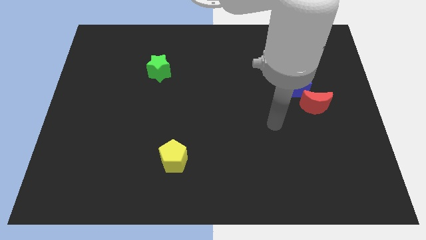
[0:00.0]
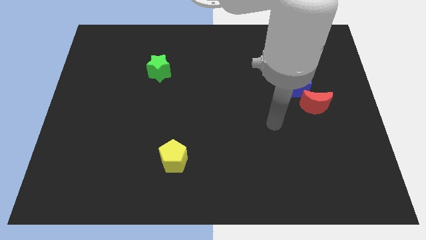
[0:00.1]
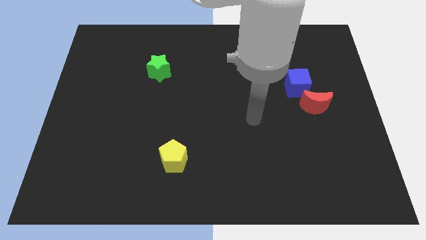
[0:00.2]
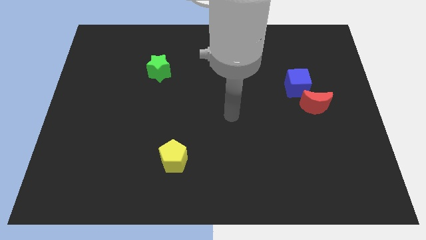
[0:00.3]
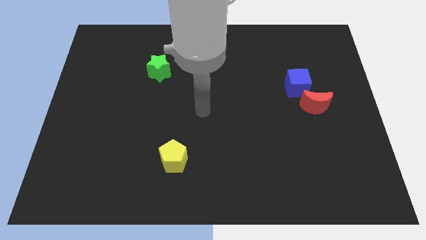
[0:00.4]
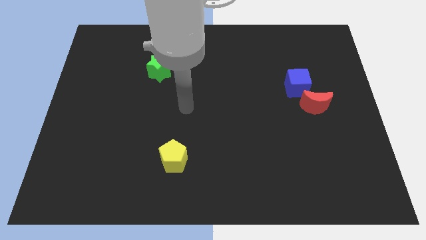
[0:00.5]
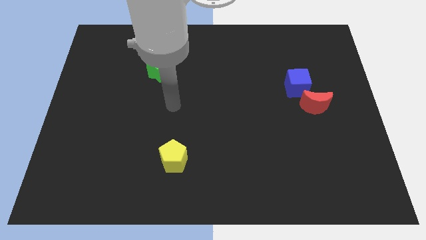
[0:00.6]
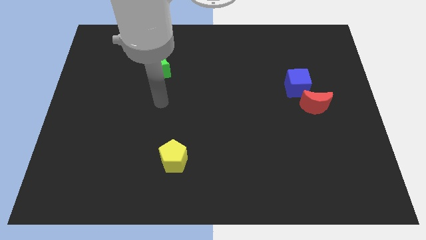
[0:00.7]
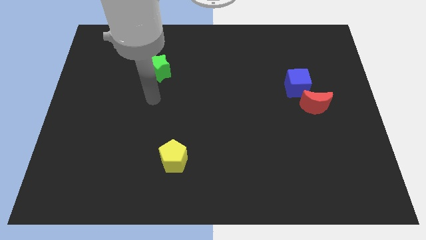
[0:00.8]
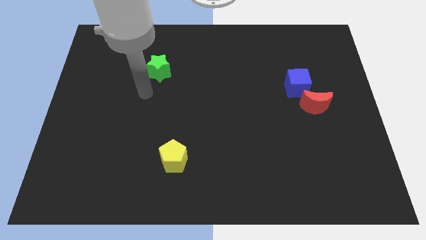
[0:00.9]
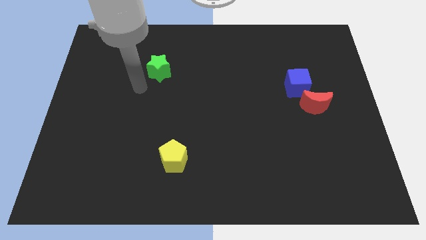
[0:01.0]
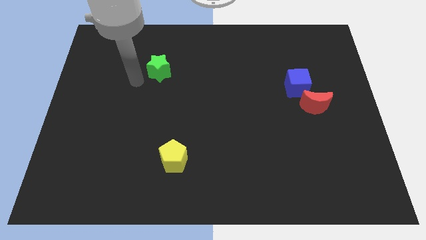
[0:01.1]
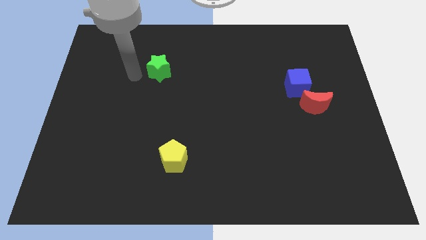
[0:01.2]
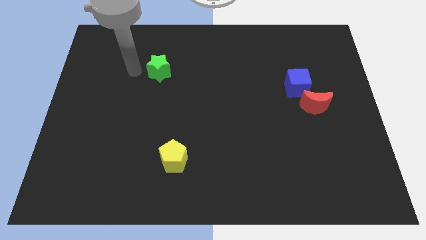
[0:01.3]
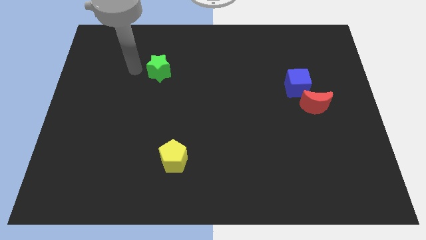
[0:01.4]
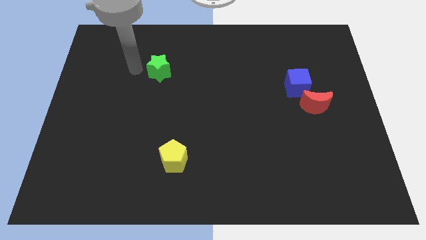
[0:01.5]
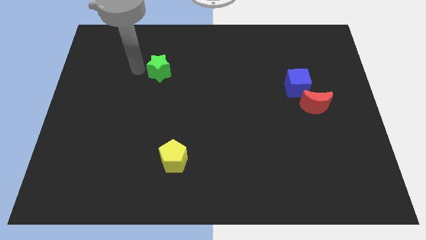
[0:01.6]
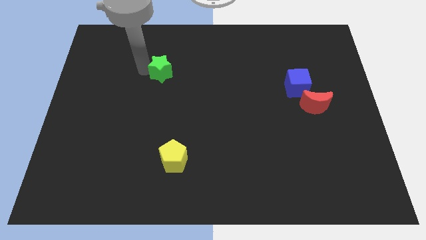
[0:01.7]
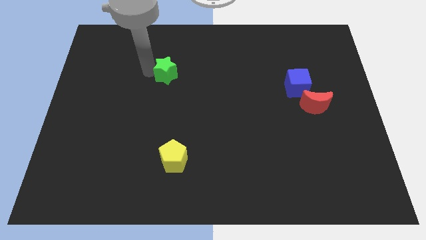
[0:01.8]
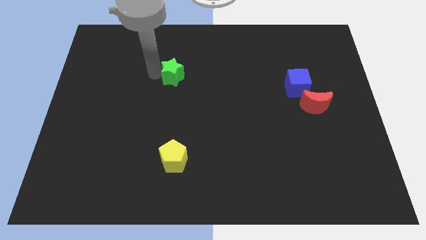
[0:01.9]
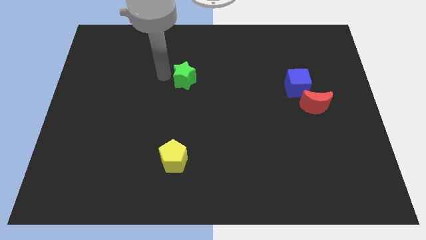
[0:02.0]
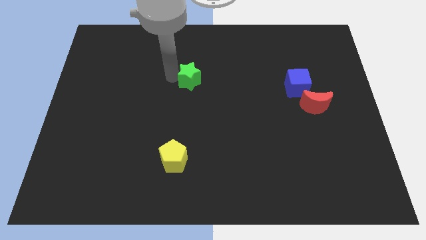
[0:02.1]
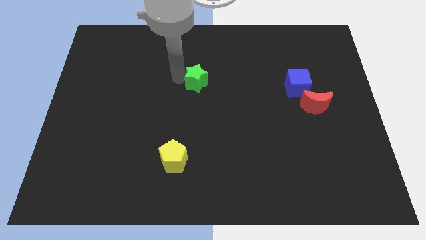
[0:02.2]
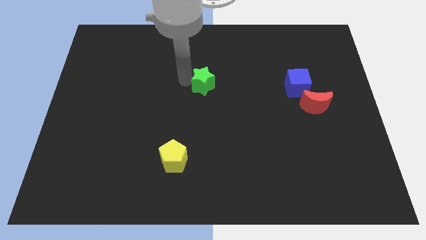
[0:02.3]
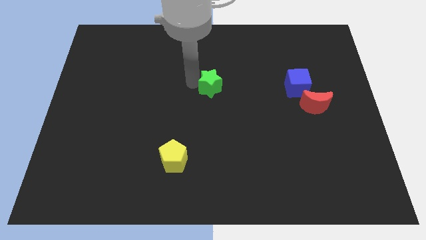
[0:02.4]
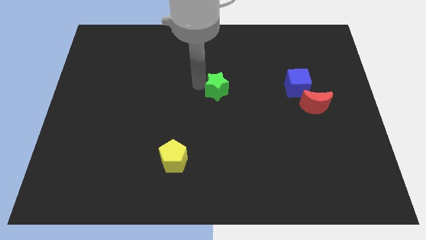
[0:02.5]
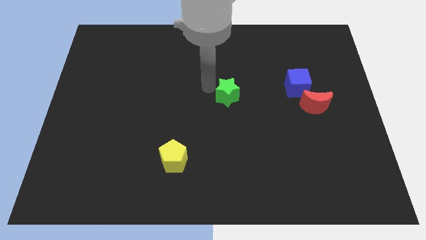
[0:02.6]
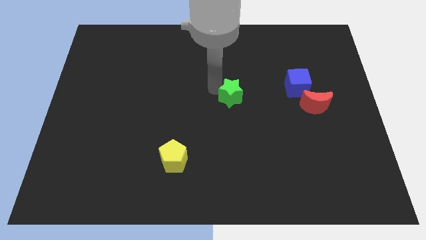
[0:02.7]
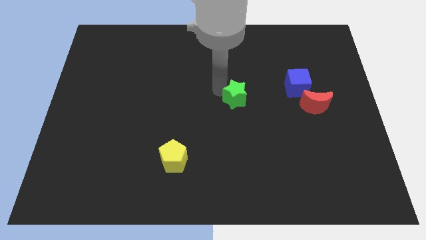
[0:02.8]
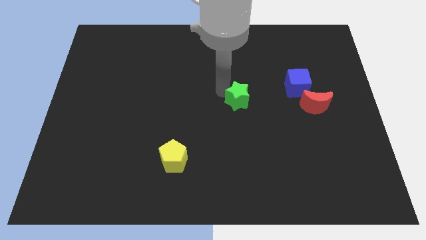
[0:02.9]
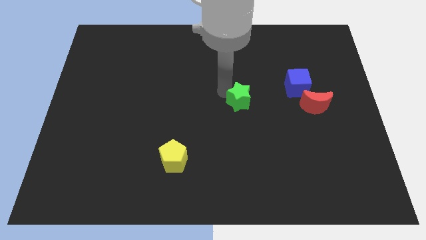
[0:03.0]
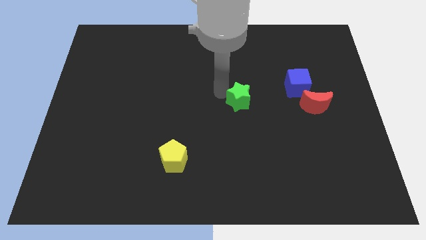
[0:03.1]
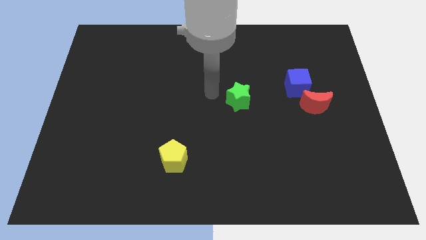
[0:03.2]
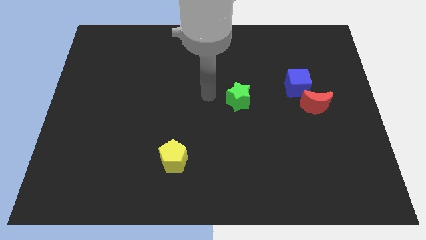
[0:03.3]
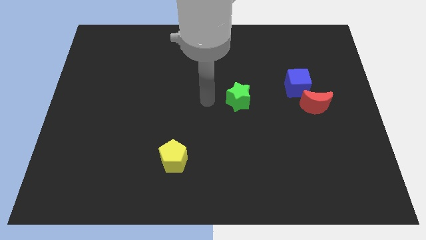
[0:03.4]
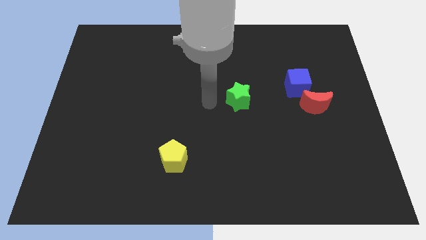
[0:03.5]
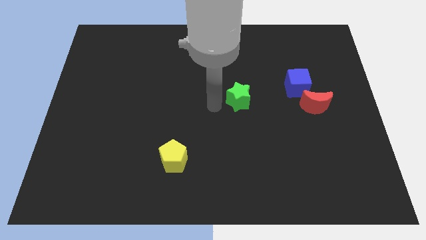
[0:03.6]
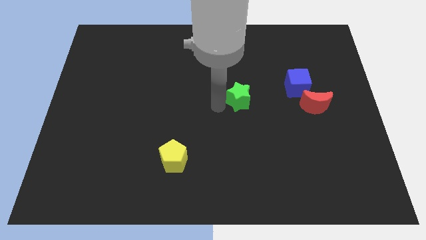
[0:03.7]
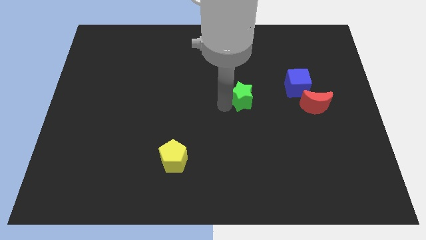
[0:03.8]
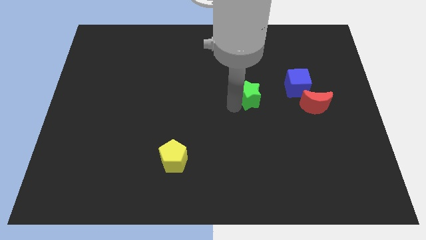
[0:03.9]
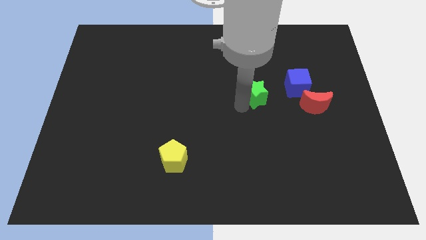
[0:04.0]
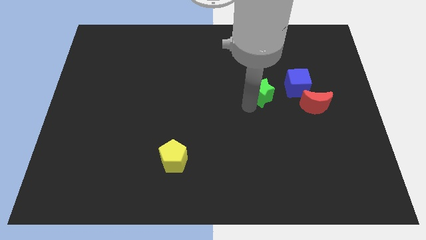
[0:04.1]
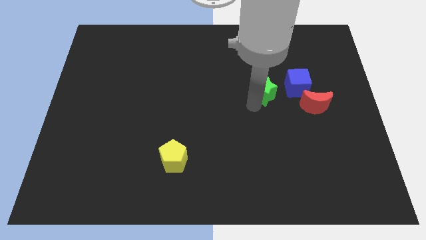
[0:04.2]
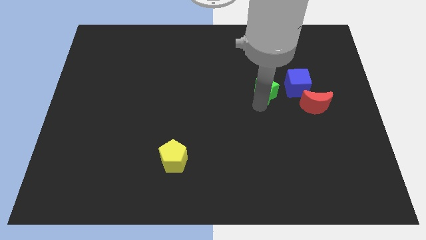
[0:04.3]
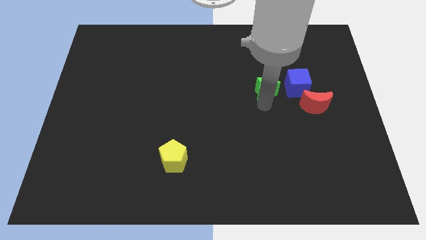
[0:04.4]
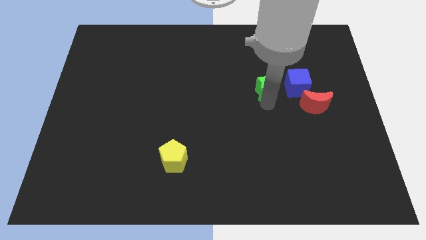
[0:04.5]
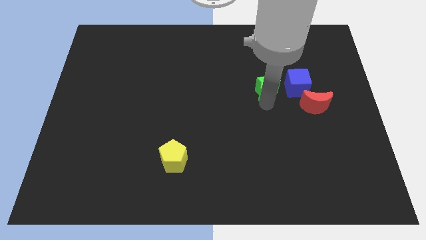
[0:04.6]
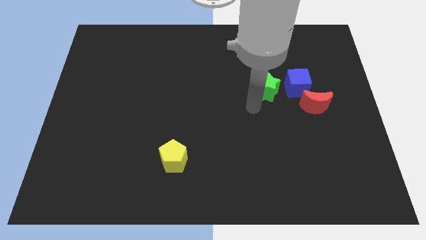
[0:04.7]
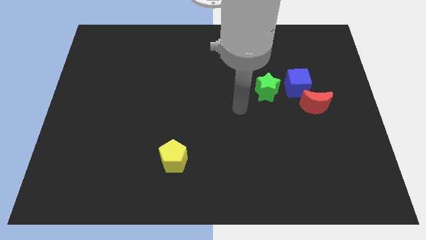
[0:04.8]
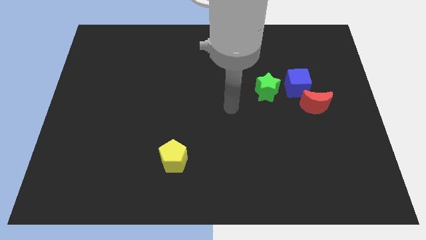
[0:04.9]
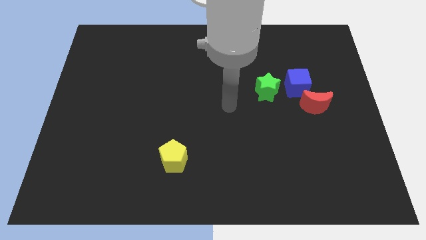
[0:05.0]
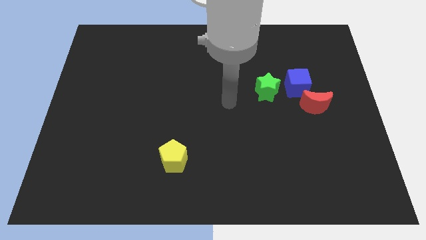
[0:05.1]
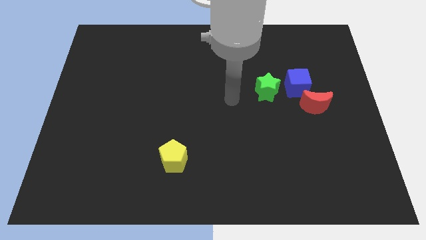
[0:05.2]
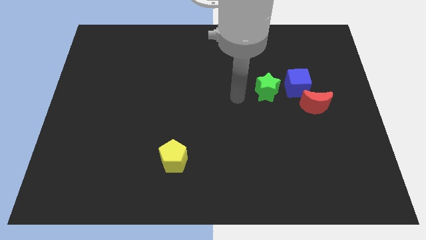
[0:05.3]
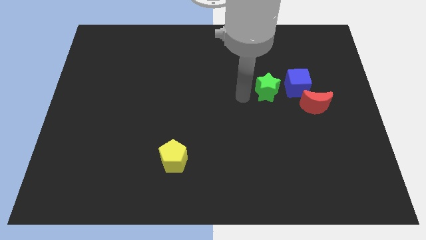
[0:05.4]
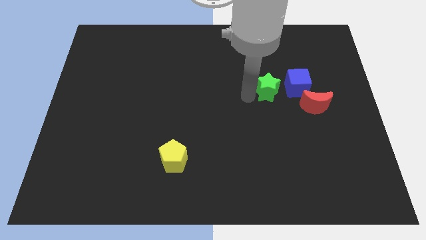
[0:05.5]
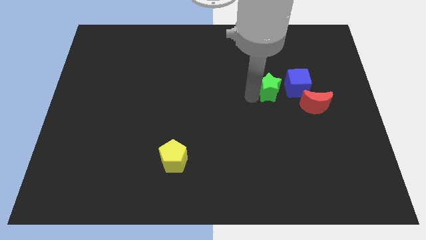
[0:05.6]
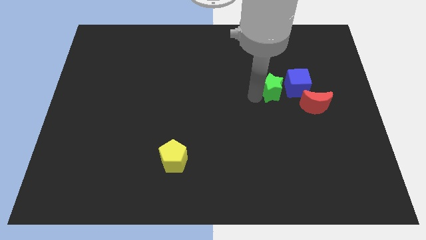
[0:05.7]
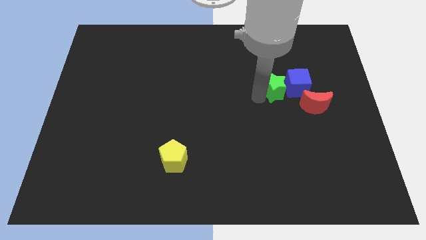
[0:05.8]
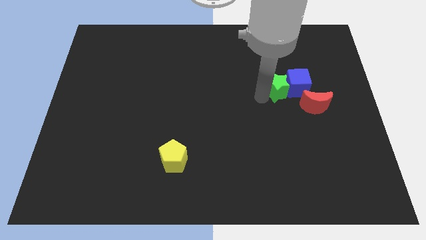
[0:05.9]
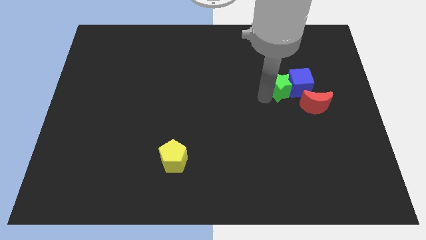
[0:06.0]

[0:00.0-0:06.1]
slide the star towards the blue cube

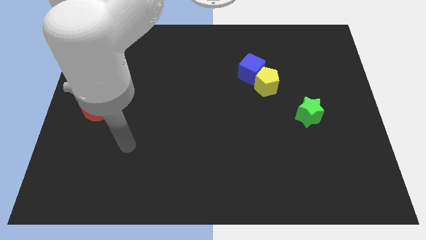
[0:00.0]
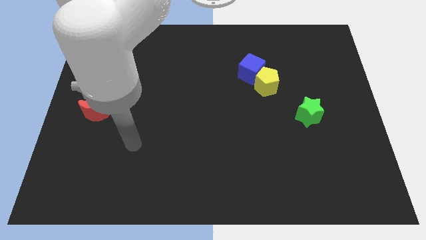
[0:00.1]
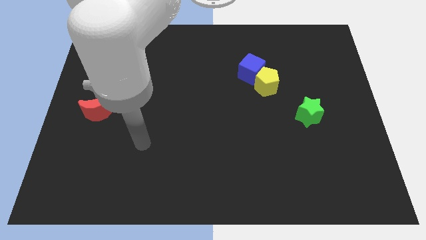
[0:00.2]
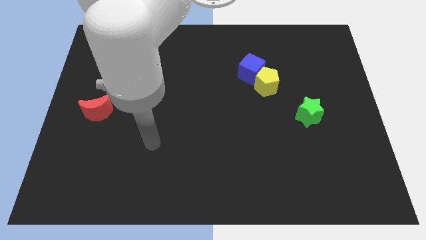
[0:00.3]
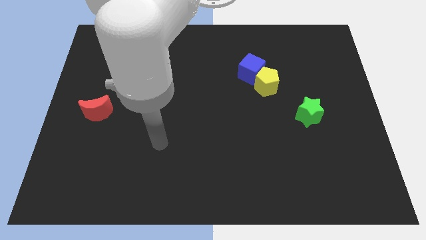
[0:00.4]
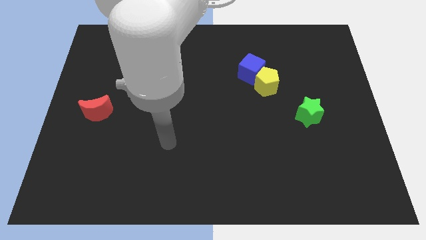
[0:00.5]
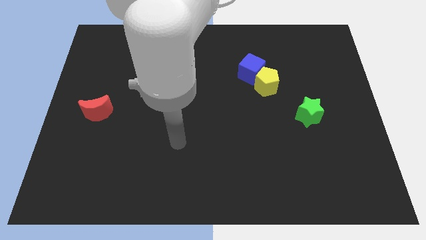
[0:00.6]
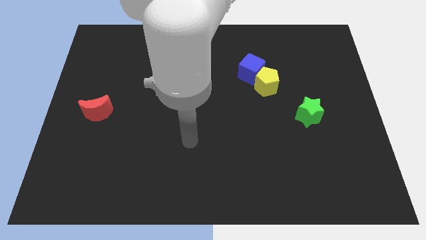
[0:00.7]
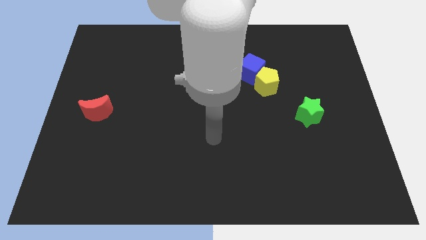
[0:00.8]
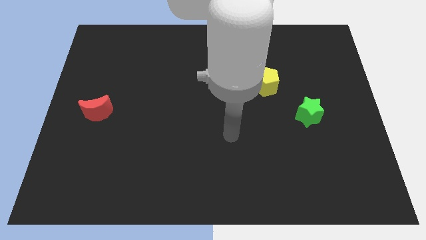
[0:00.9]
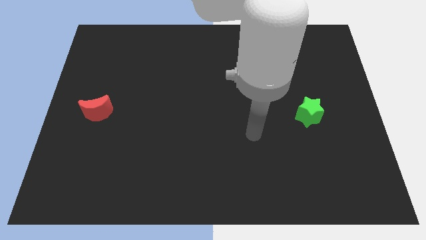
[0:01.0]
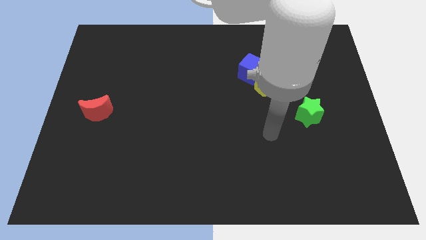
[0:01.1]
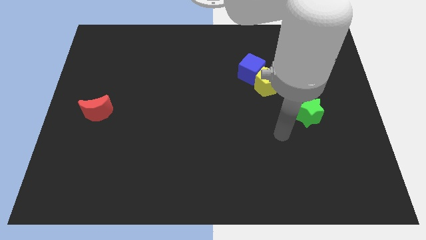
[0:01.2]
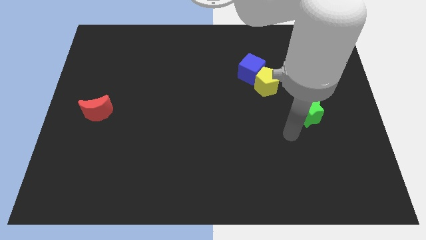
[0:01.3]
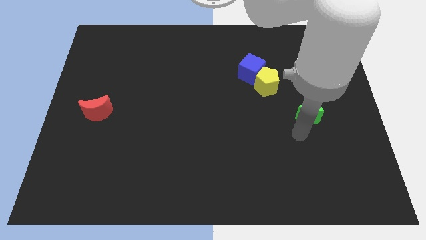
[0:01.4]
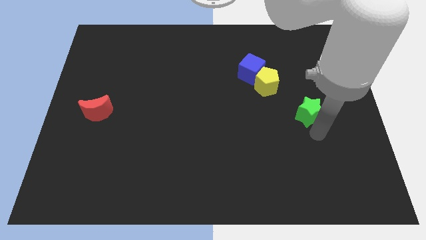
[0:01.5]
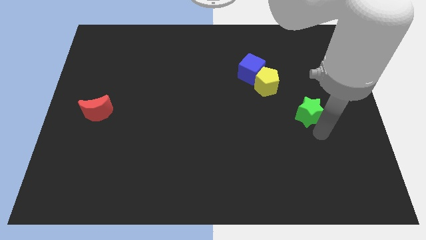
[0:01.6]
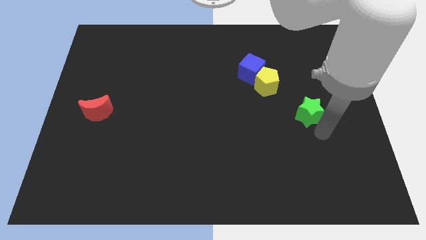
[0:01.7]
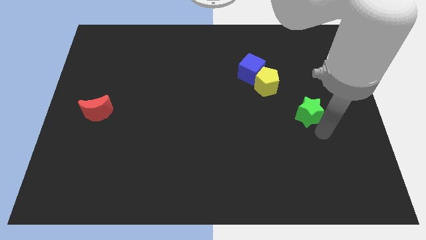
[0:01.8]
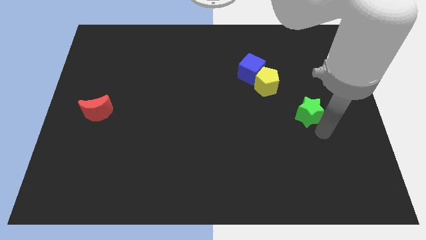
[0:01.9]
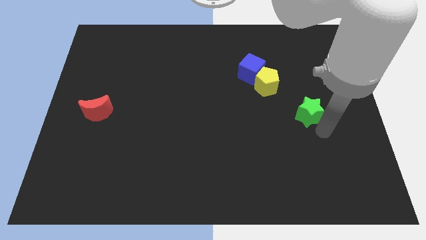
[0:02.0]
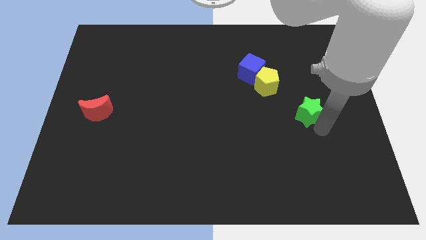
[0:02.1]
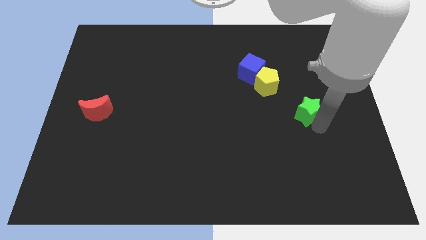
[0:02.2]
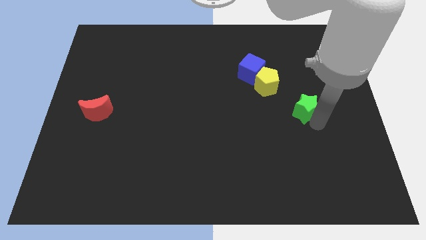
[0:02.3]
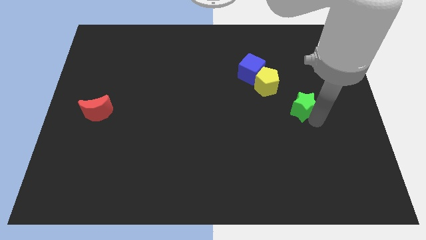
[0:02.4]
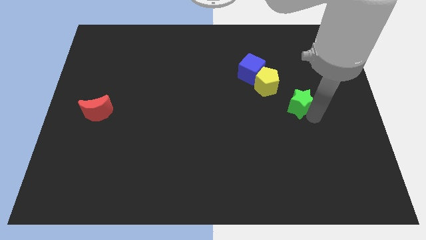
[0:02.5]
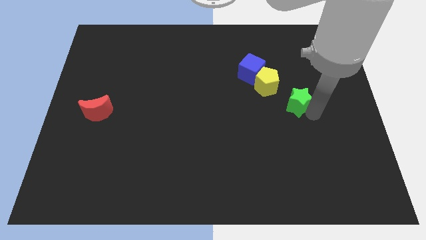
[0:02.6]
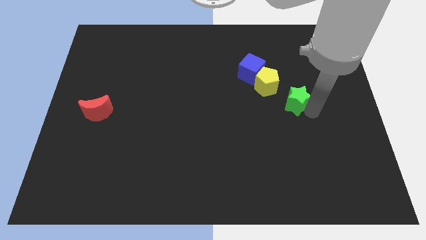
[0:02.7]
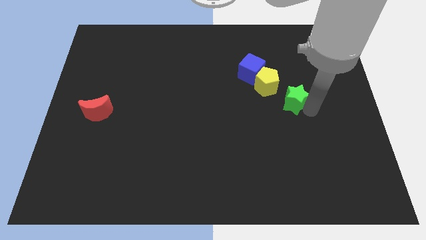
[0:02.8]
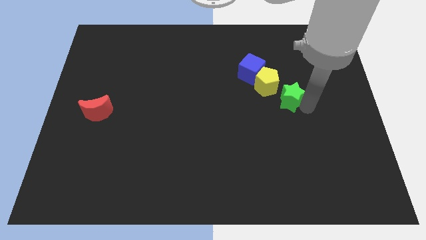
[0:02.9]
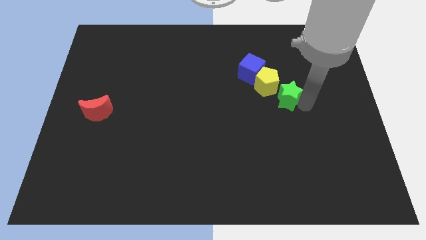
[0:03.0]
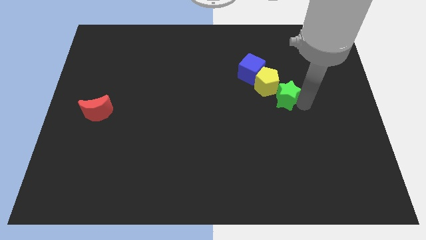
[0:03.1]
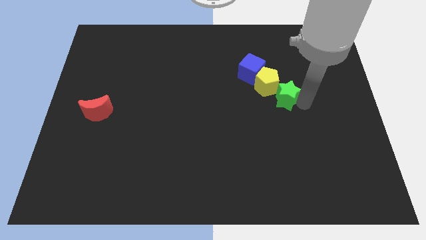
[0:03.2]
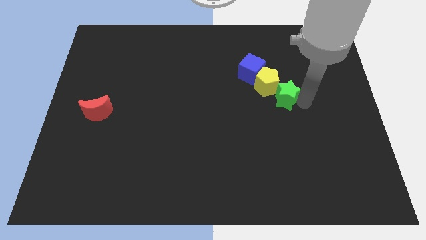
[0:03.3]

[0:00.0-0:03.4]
slide the green block towards the pentagon
